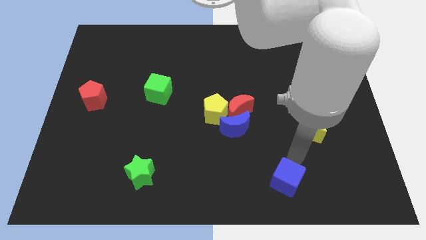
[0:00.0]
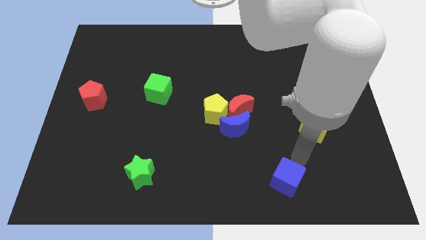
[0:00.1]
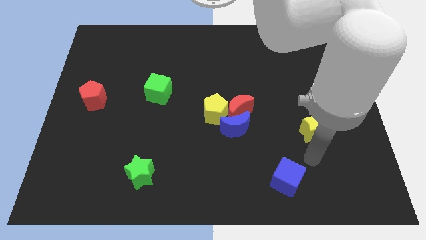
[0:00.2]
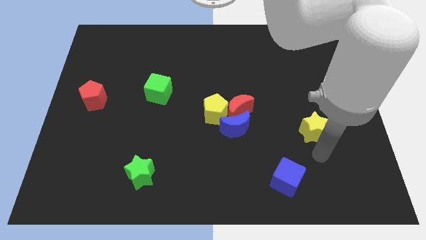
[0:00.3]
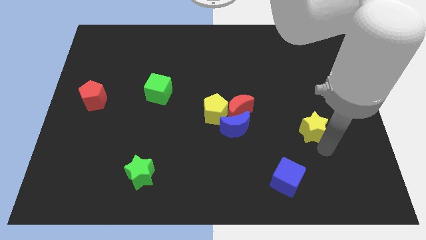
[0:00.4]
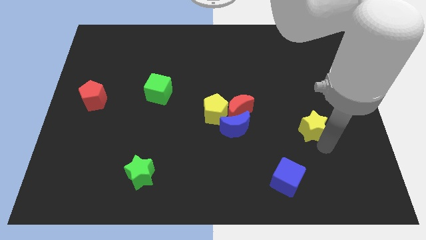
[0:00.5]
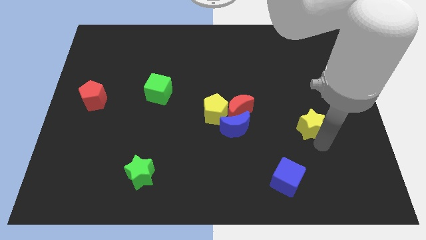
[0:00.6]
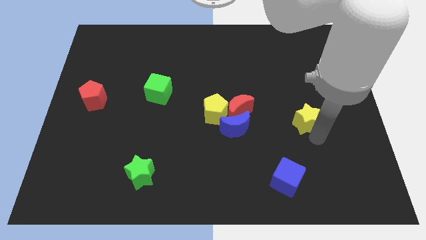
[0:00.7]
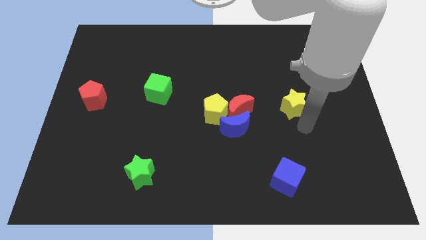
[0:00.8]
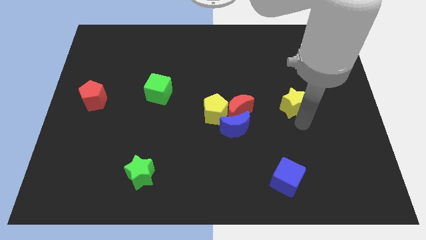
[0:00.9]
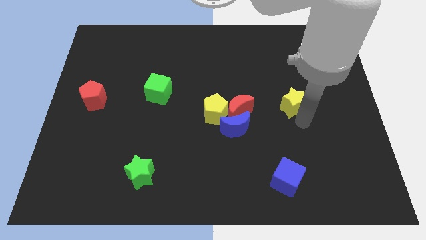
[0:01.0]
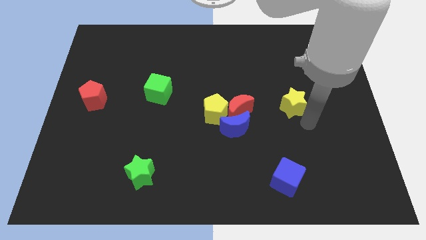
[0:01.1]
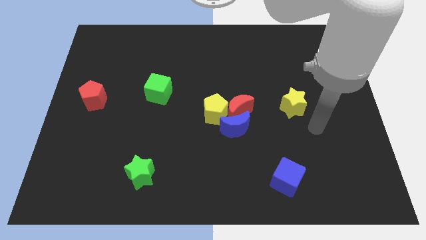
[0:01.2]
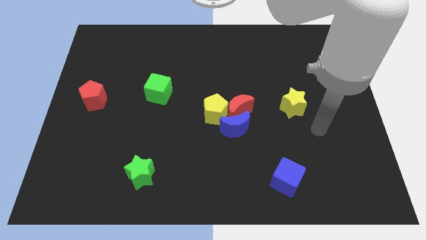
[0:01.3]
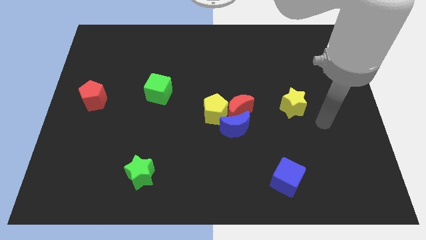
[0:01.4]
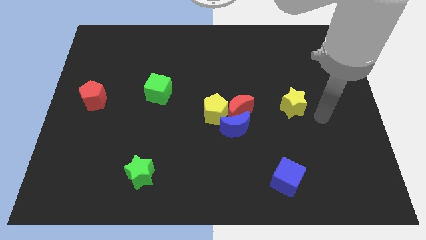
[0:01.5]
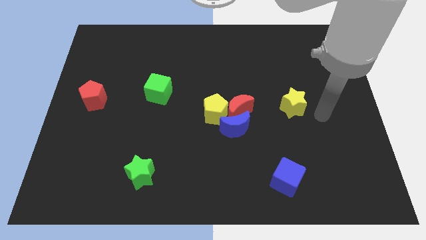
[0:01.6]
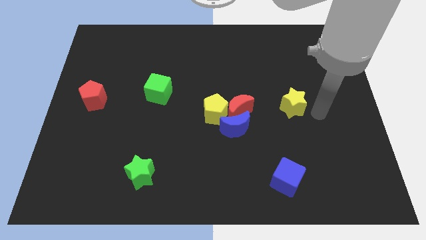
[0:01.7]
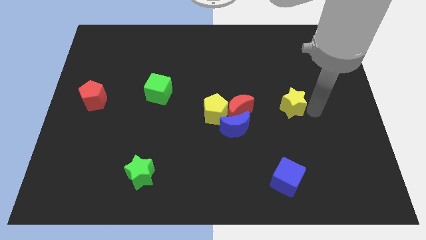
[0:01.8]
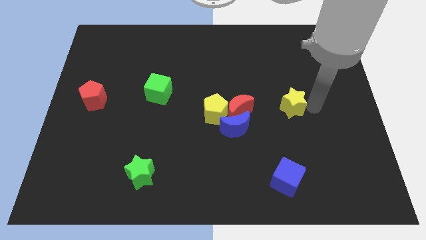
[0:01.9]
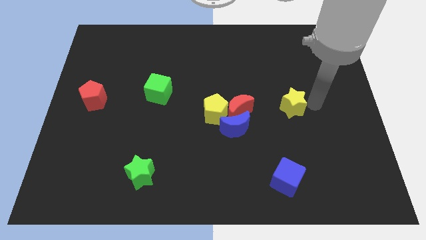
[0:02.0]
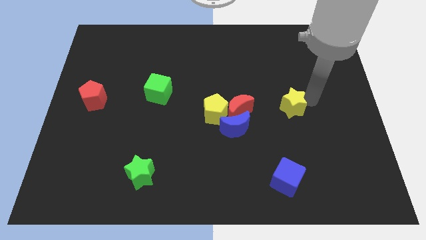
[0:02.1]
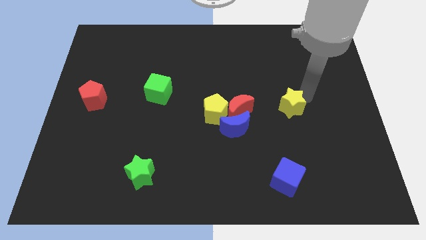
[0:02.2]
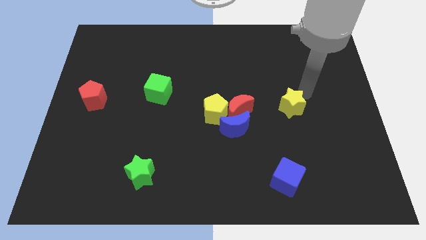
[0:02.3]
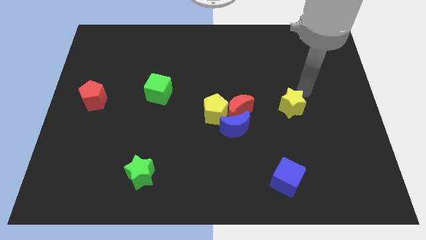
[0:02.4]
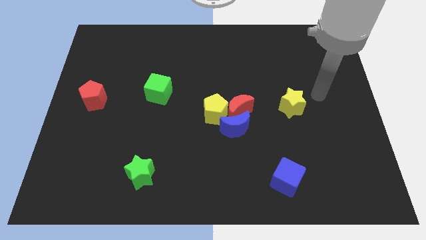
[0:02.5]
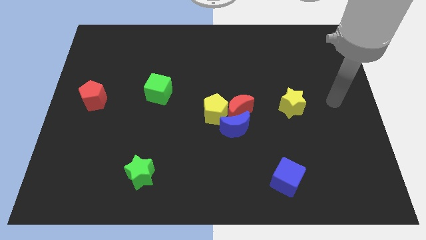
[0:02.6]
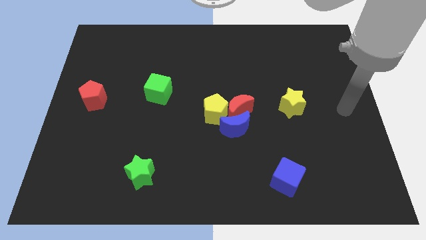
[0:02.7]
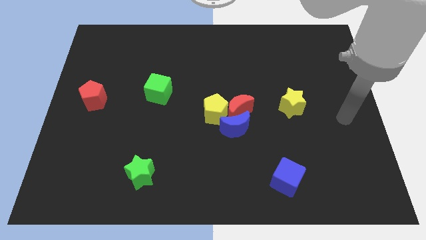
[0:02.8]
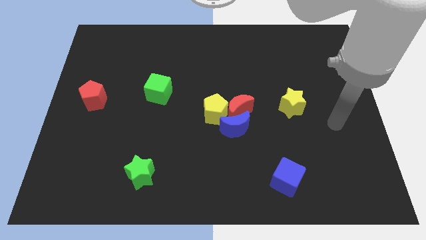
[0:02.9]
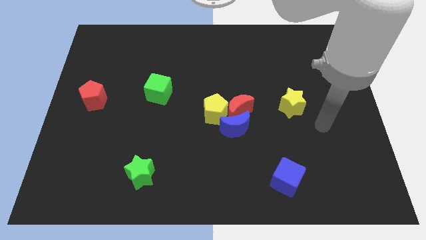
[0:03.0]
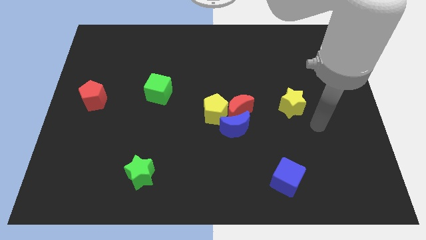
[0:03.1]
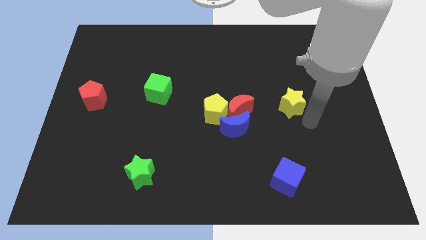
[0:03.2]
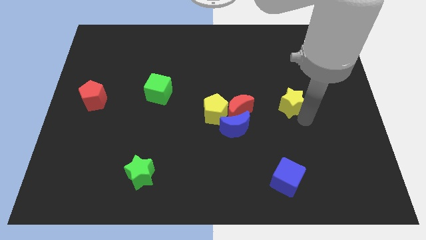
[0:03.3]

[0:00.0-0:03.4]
move the yellow star to the right side of the red moon

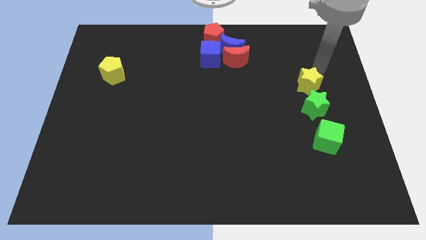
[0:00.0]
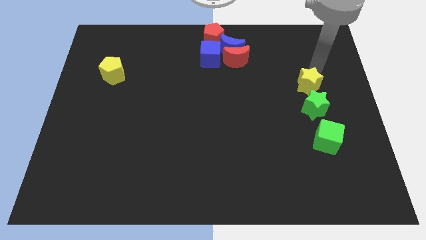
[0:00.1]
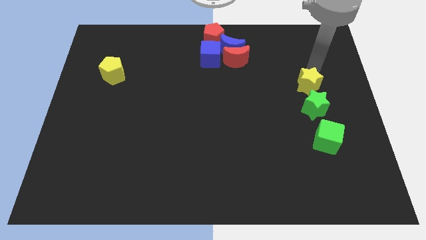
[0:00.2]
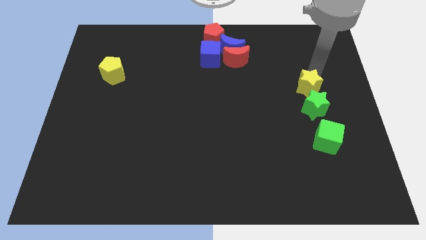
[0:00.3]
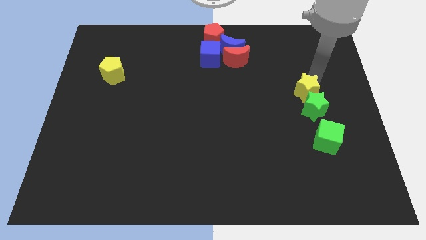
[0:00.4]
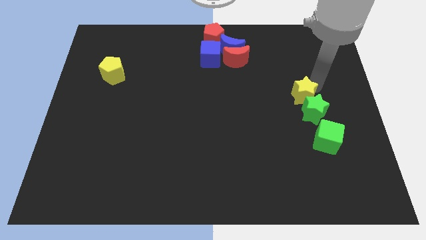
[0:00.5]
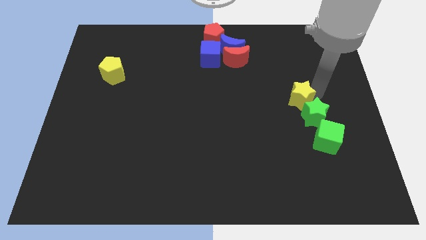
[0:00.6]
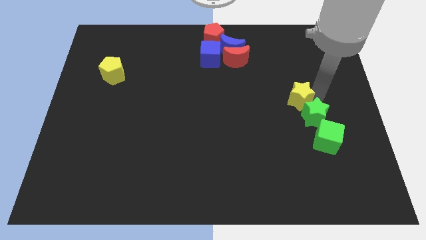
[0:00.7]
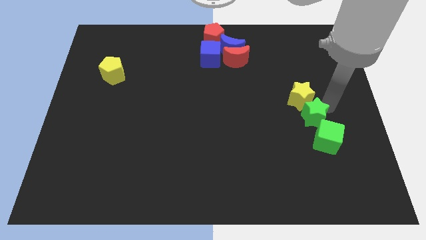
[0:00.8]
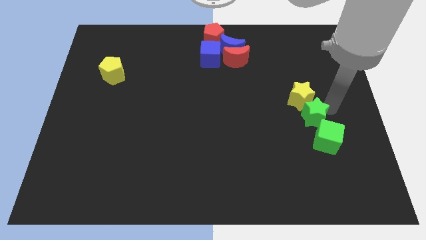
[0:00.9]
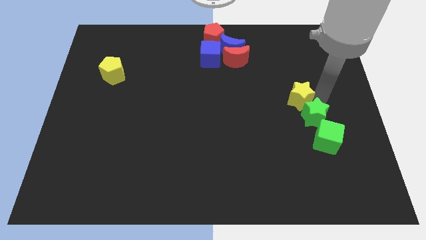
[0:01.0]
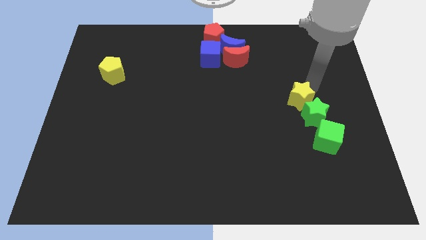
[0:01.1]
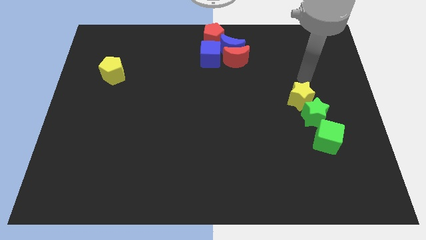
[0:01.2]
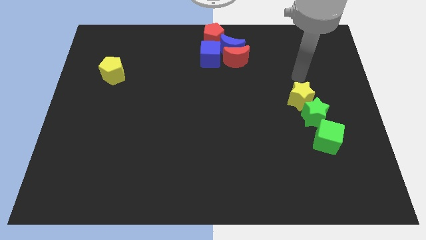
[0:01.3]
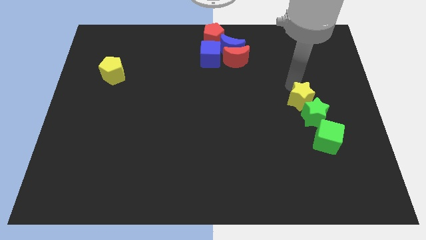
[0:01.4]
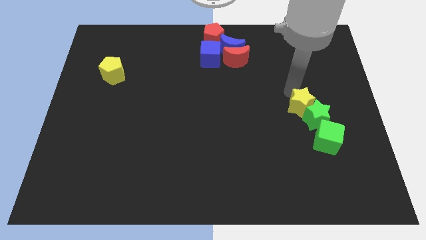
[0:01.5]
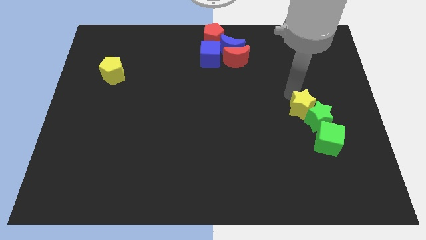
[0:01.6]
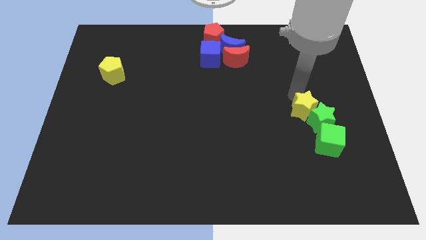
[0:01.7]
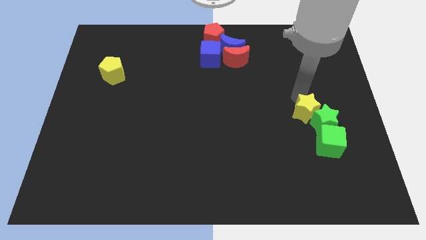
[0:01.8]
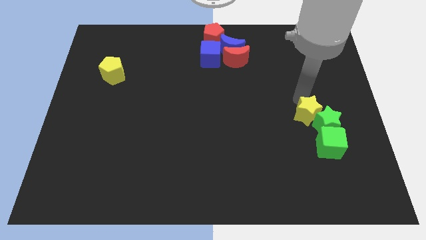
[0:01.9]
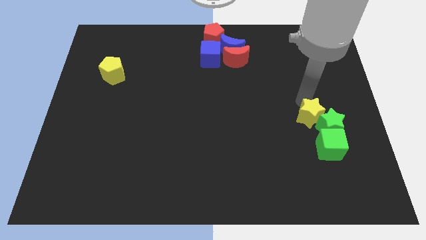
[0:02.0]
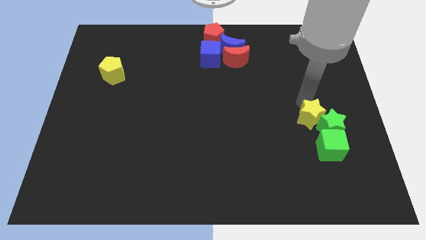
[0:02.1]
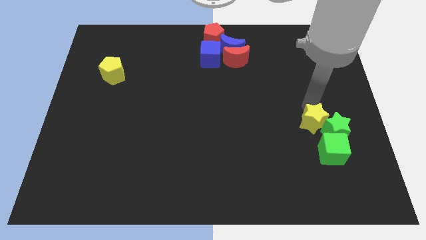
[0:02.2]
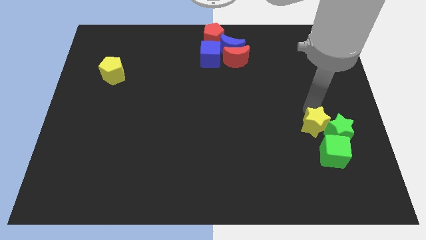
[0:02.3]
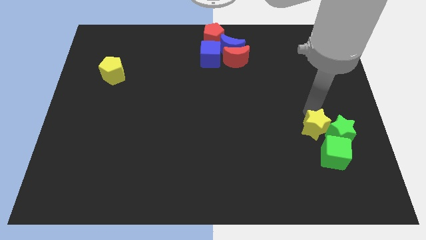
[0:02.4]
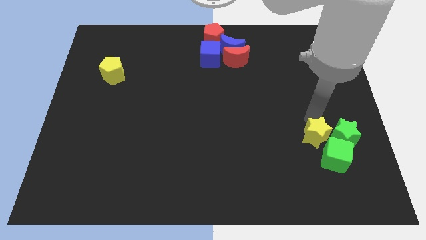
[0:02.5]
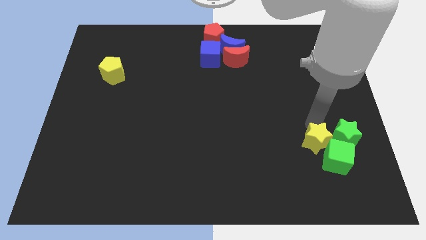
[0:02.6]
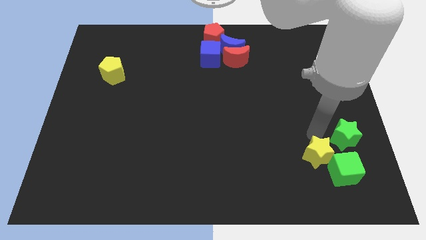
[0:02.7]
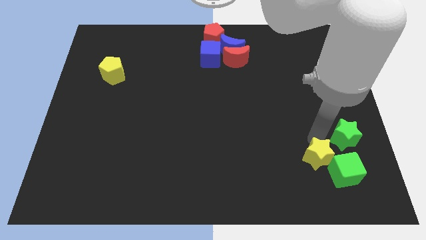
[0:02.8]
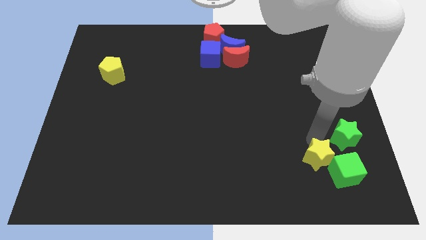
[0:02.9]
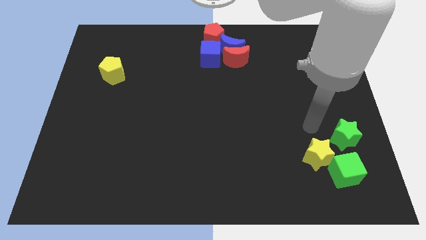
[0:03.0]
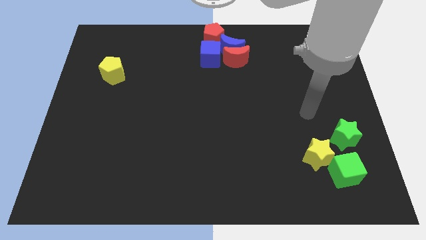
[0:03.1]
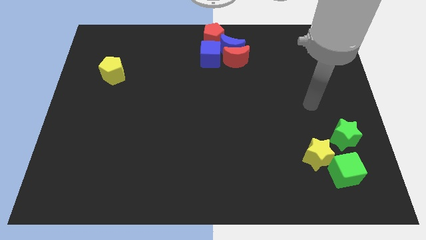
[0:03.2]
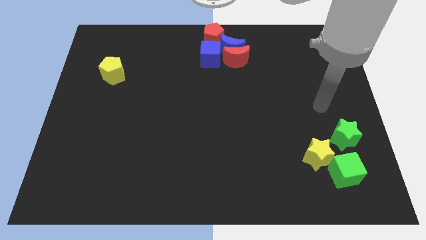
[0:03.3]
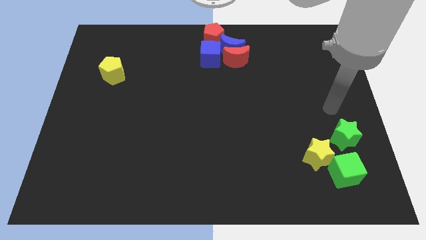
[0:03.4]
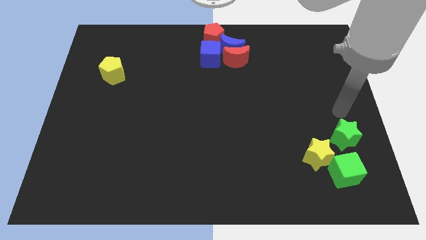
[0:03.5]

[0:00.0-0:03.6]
push the yellow star into the green cube

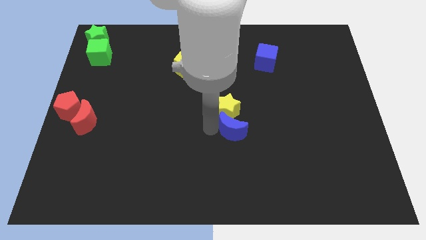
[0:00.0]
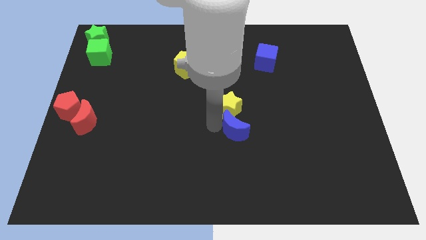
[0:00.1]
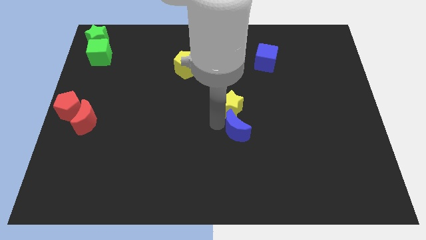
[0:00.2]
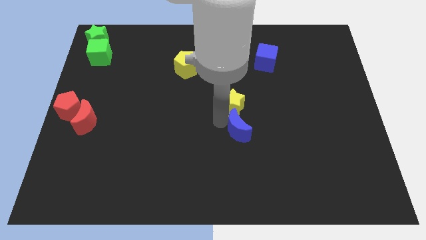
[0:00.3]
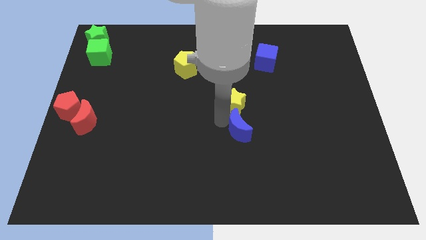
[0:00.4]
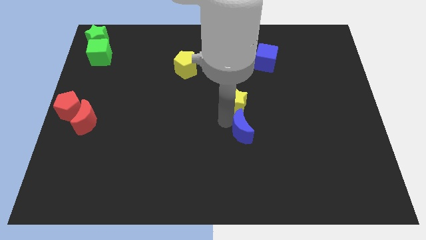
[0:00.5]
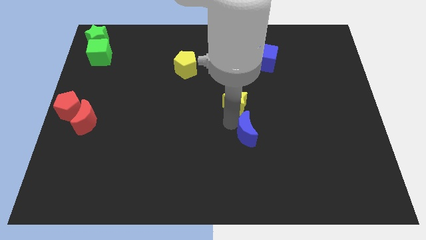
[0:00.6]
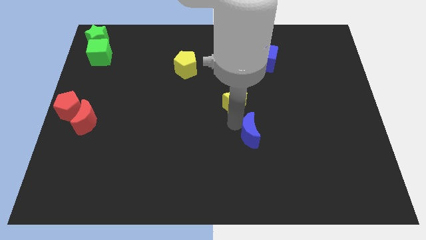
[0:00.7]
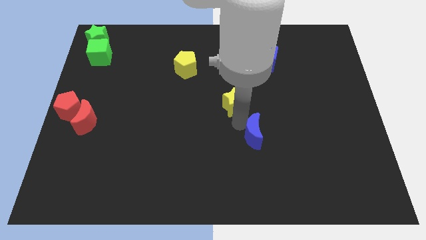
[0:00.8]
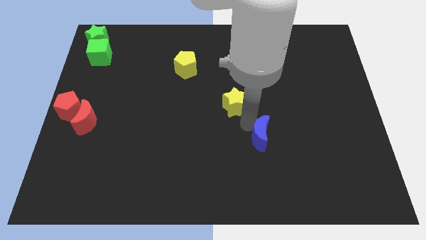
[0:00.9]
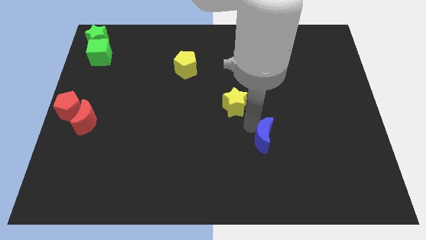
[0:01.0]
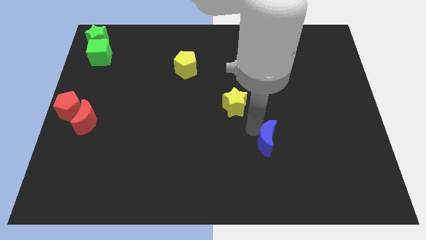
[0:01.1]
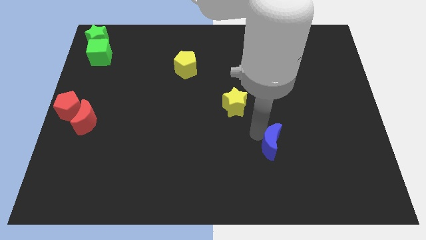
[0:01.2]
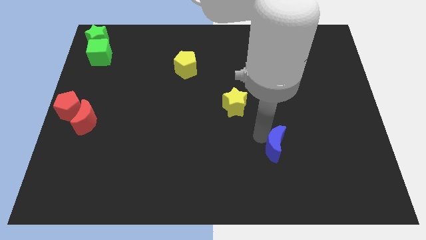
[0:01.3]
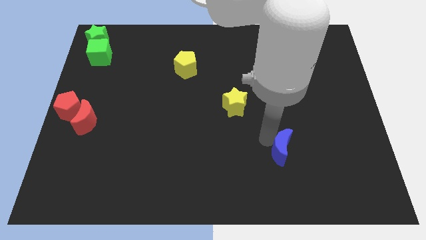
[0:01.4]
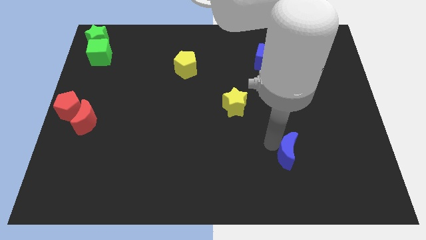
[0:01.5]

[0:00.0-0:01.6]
separate the blue crescent from the yellow star

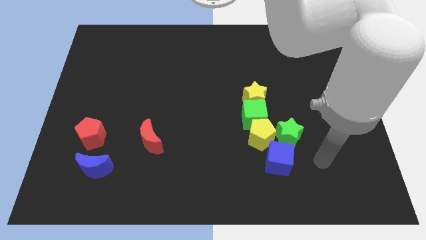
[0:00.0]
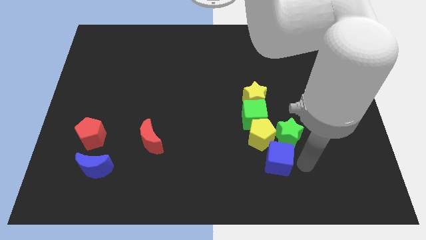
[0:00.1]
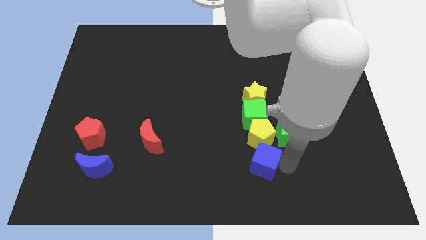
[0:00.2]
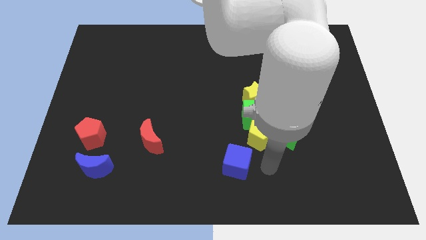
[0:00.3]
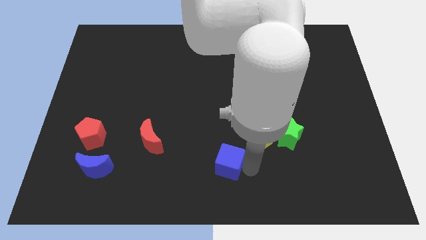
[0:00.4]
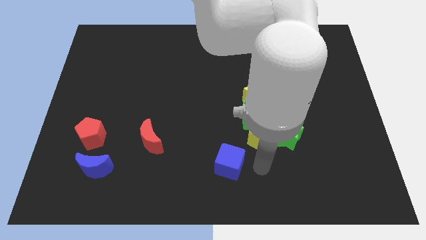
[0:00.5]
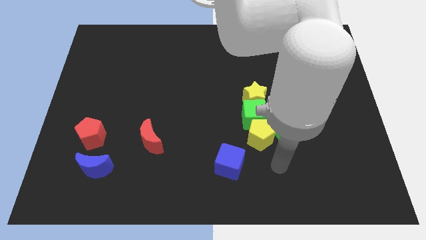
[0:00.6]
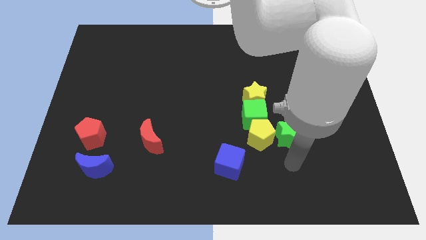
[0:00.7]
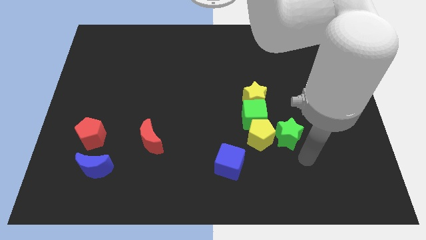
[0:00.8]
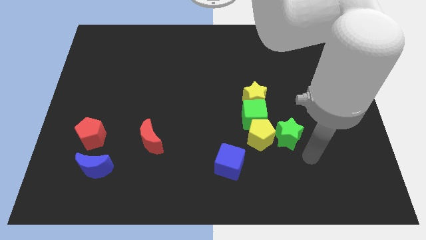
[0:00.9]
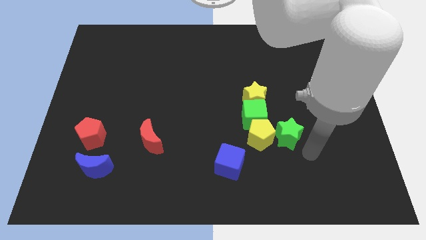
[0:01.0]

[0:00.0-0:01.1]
slide blue cube slightly to the left
